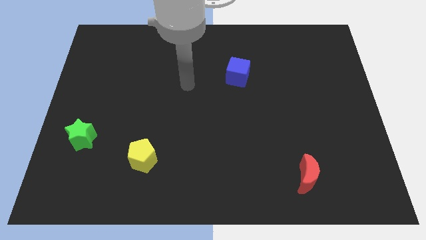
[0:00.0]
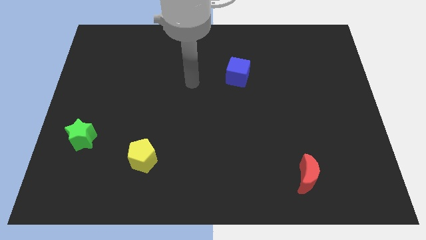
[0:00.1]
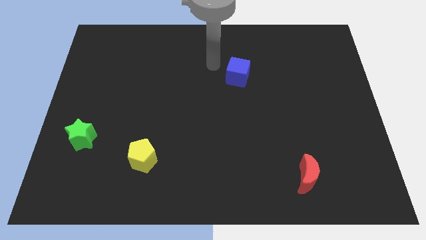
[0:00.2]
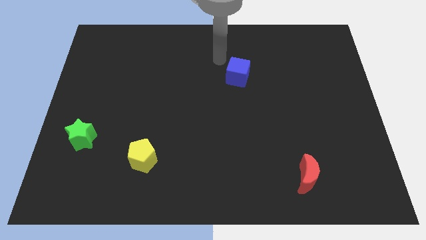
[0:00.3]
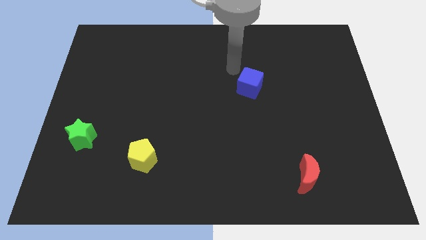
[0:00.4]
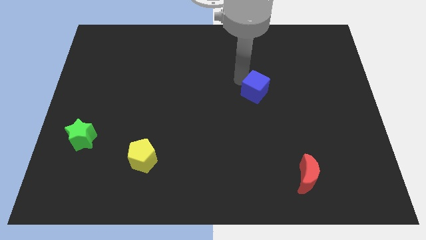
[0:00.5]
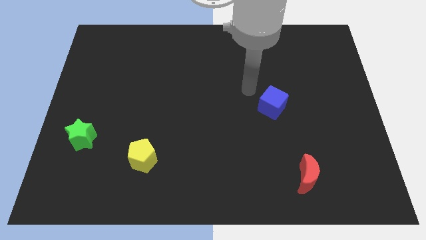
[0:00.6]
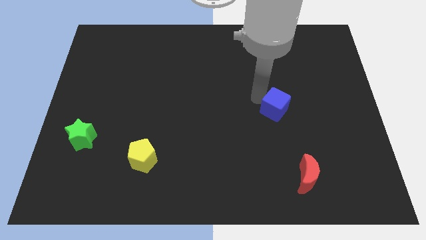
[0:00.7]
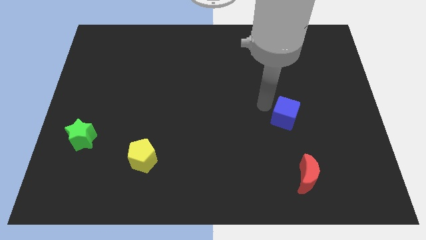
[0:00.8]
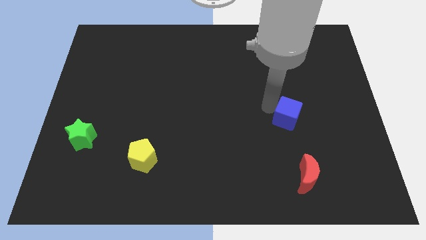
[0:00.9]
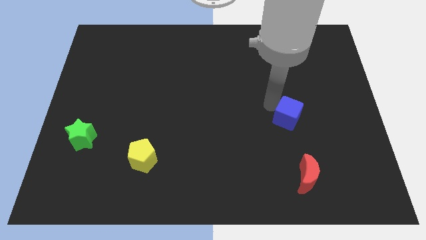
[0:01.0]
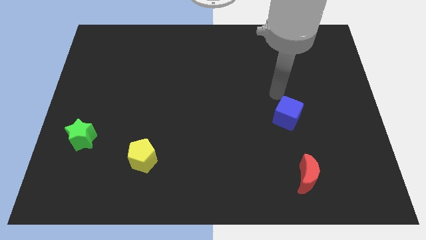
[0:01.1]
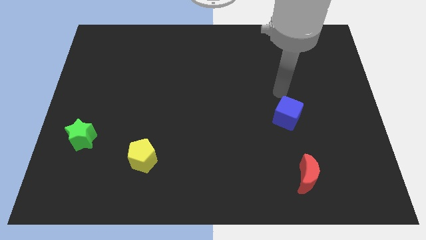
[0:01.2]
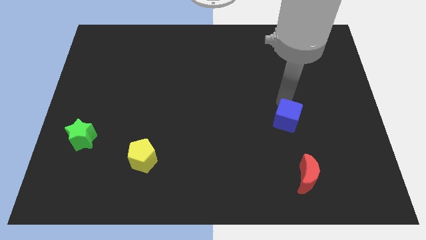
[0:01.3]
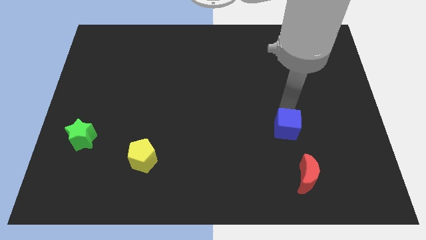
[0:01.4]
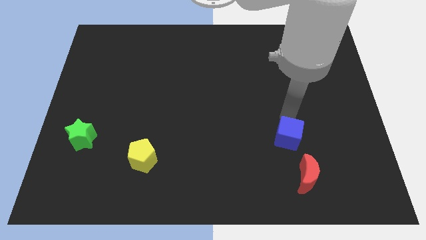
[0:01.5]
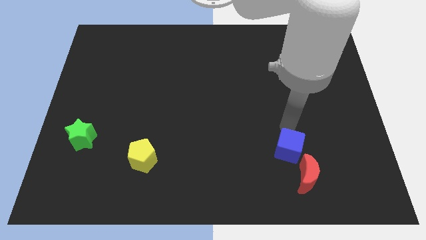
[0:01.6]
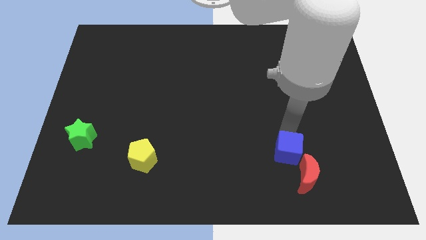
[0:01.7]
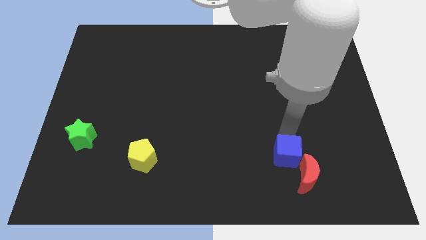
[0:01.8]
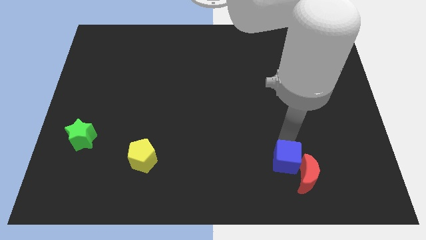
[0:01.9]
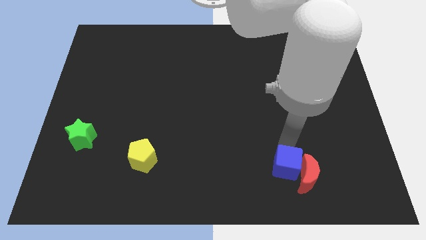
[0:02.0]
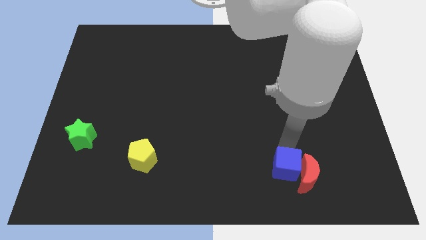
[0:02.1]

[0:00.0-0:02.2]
move the blue block close to the red moon

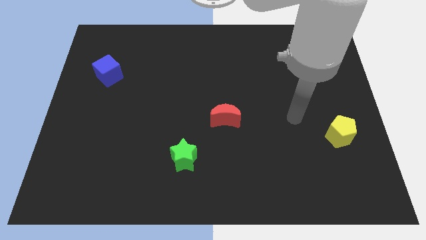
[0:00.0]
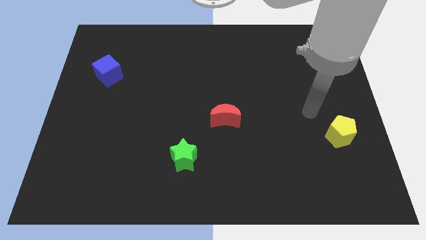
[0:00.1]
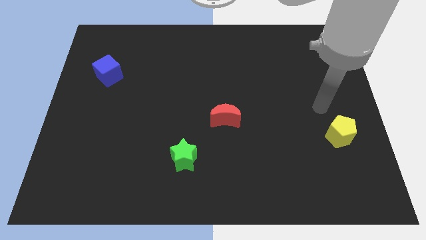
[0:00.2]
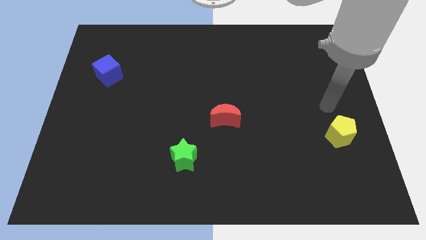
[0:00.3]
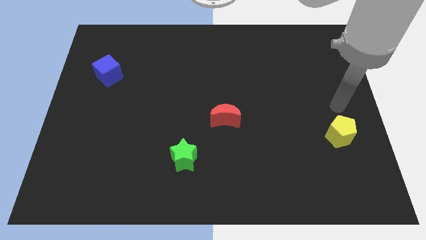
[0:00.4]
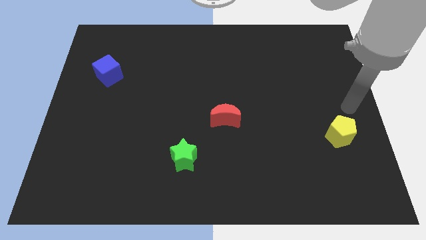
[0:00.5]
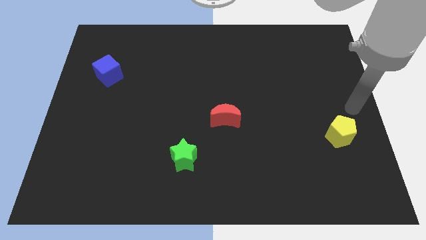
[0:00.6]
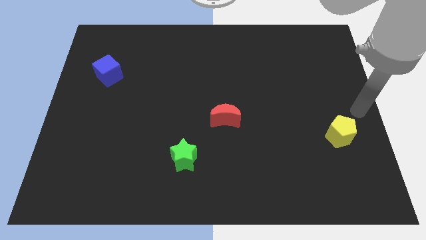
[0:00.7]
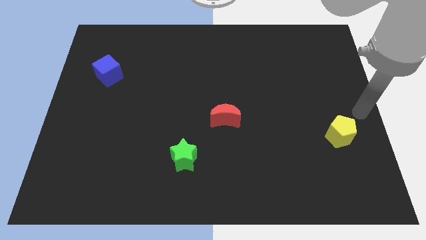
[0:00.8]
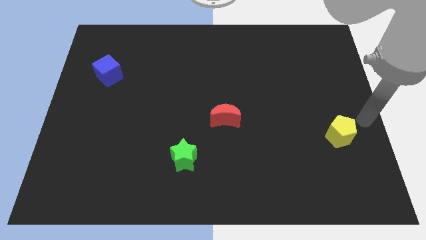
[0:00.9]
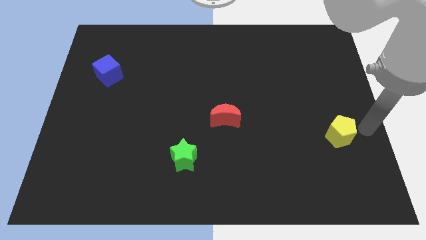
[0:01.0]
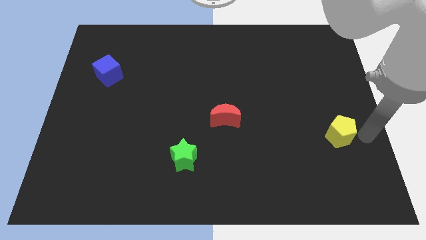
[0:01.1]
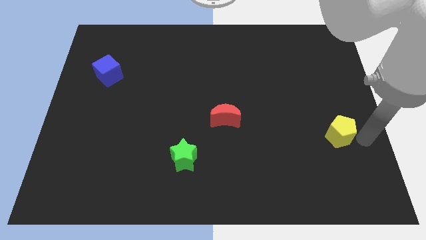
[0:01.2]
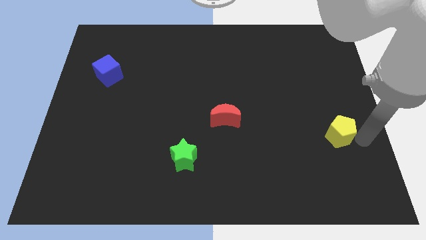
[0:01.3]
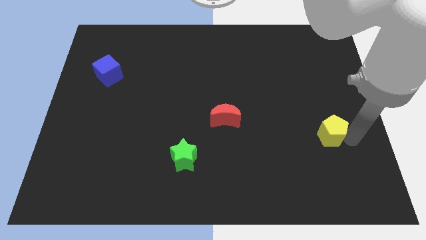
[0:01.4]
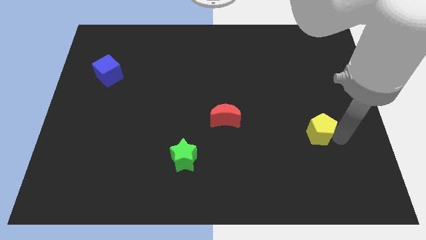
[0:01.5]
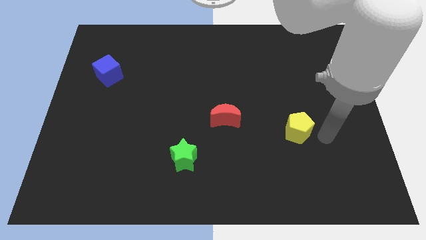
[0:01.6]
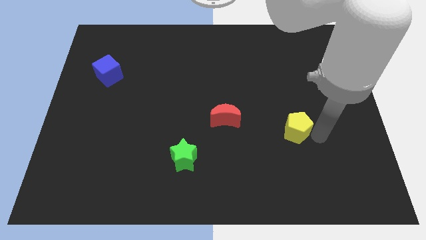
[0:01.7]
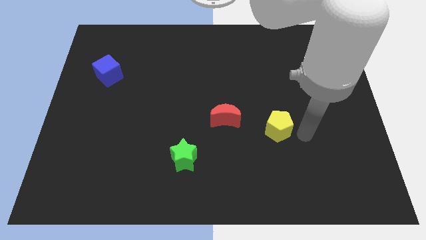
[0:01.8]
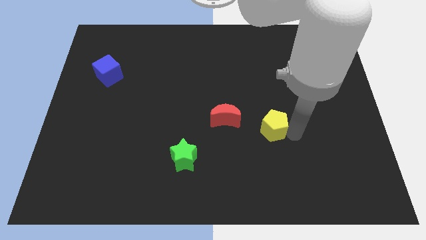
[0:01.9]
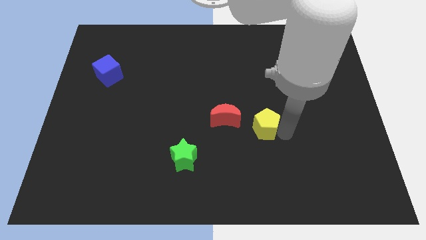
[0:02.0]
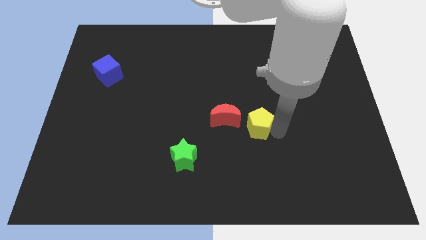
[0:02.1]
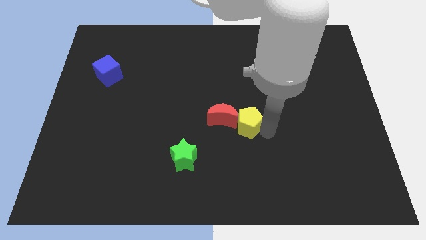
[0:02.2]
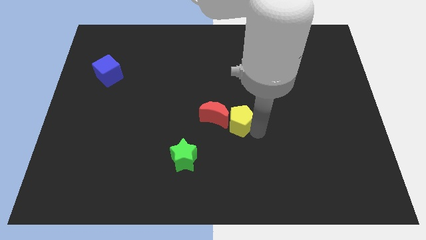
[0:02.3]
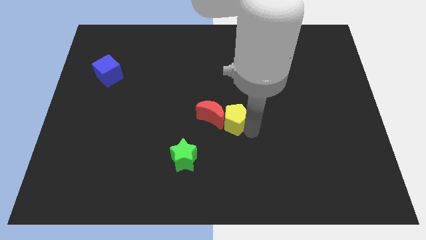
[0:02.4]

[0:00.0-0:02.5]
slide the yellow pentagon towards the moon

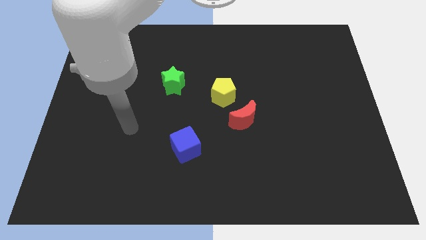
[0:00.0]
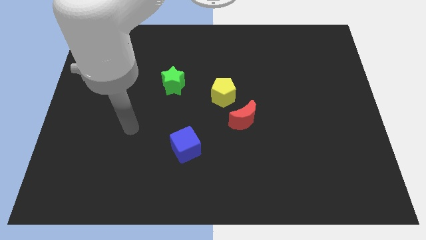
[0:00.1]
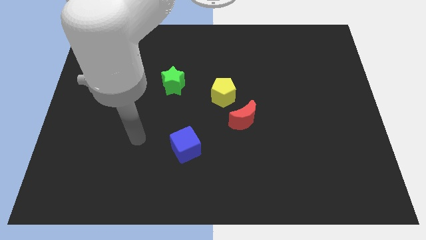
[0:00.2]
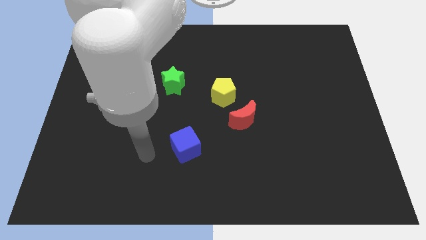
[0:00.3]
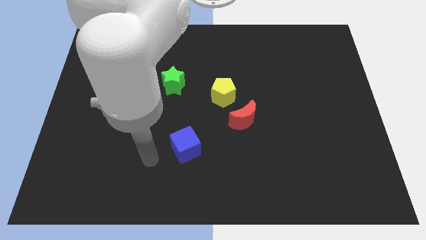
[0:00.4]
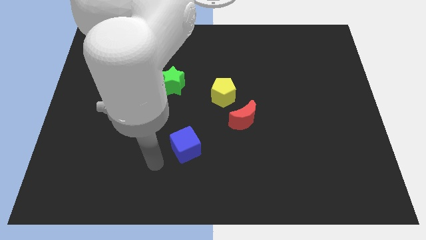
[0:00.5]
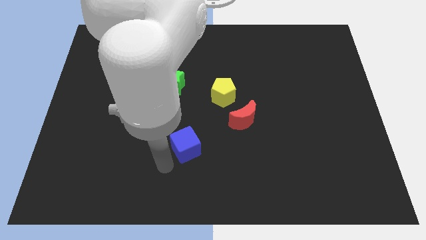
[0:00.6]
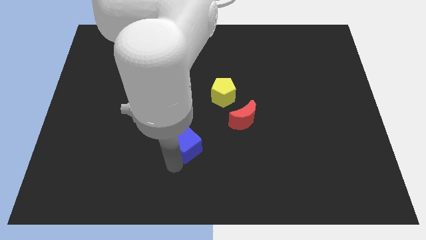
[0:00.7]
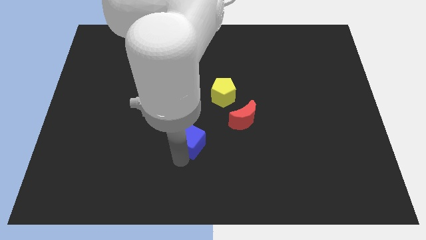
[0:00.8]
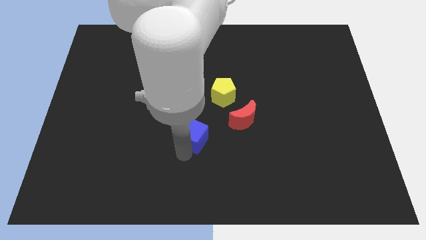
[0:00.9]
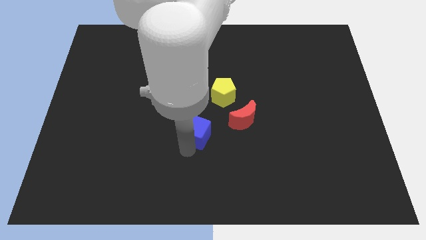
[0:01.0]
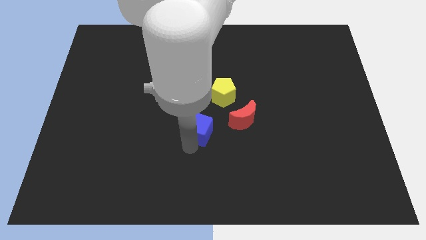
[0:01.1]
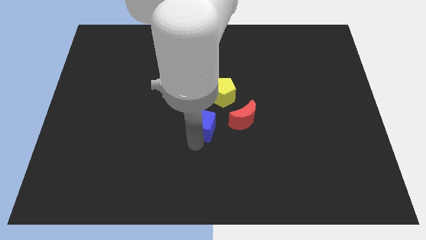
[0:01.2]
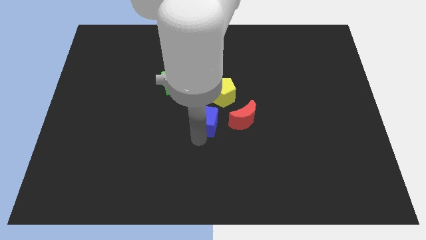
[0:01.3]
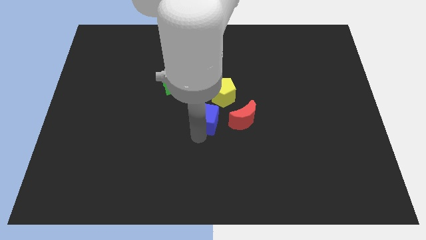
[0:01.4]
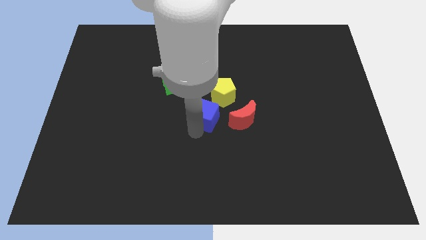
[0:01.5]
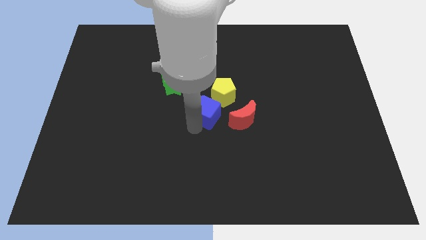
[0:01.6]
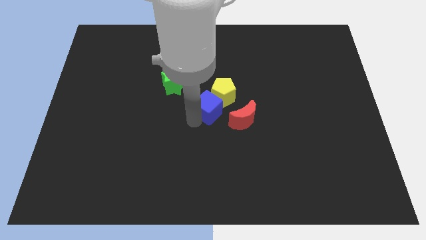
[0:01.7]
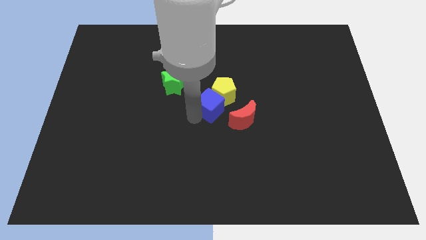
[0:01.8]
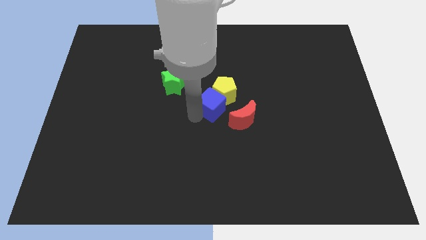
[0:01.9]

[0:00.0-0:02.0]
slide the blue block next to the yellow pentagon

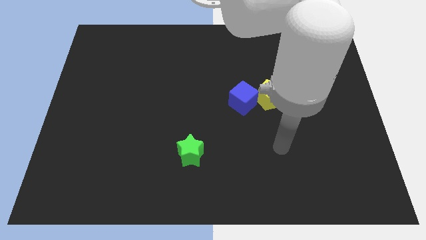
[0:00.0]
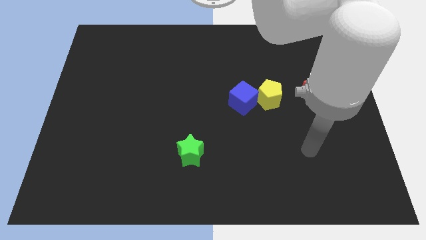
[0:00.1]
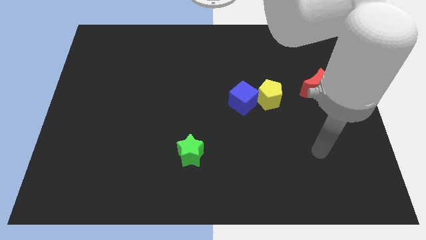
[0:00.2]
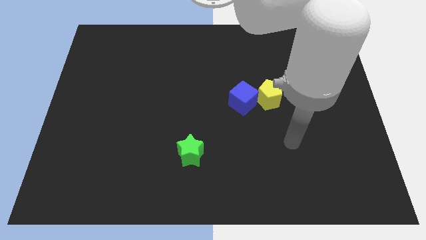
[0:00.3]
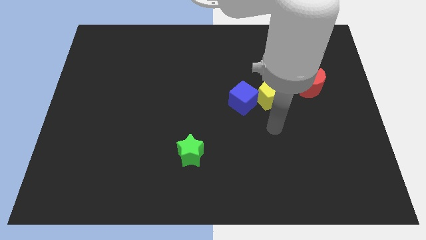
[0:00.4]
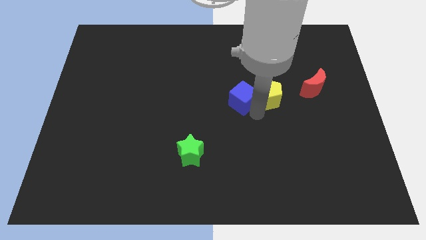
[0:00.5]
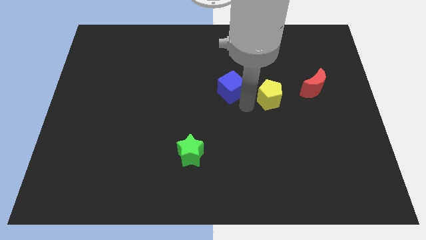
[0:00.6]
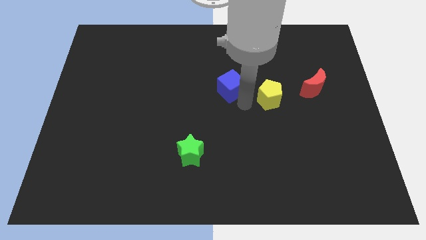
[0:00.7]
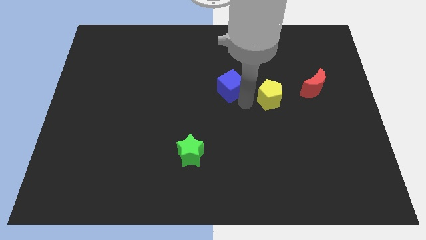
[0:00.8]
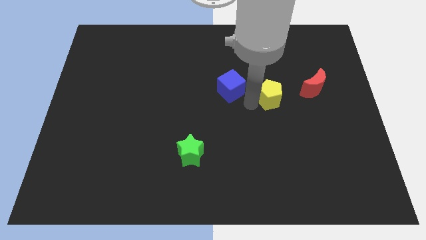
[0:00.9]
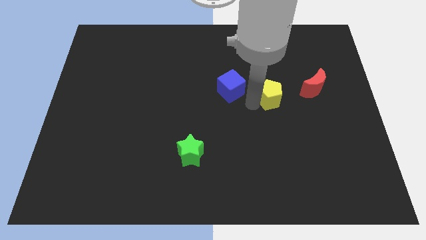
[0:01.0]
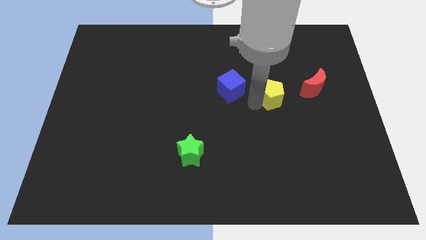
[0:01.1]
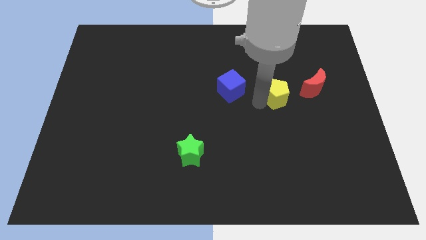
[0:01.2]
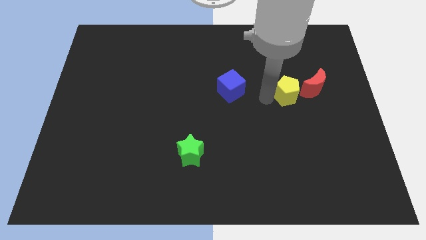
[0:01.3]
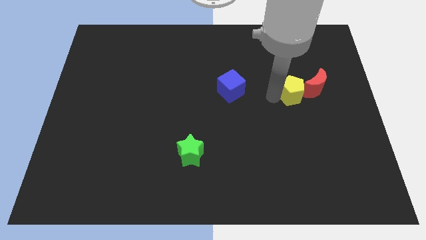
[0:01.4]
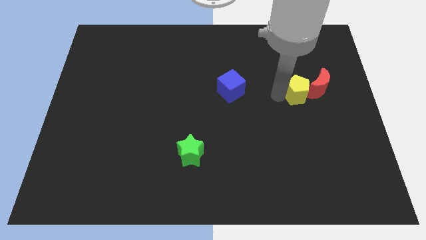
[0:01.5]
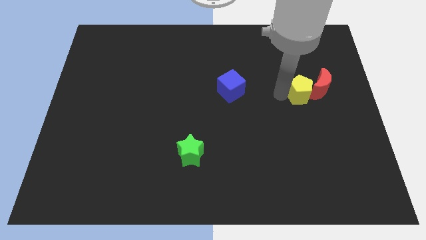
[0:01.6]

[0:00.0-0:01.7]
push the yellow block next to the red moon

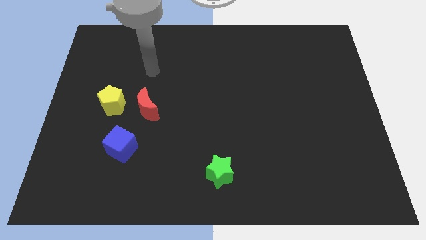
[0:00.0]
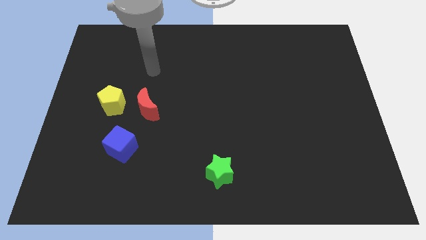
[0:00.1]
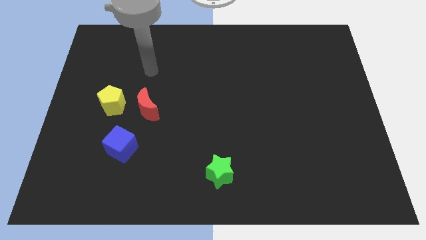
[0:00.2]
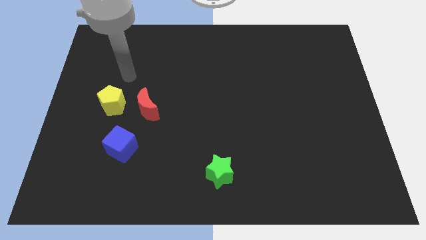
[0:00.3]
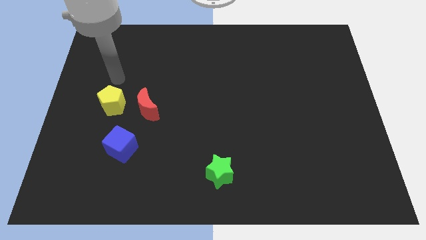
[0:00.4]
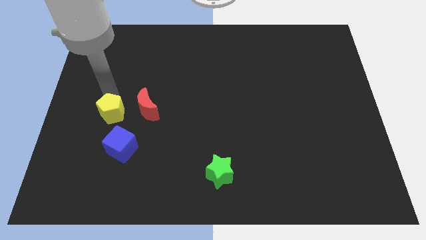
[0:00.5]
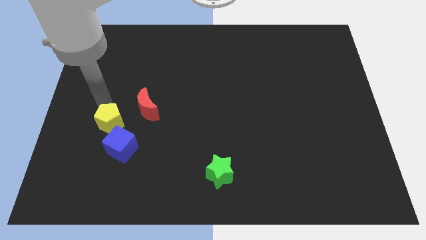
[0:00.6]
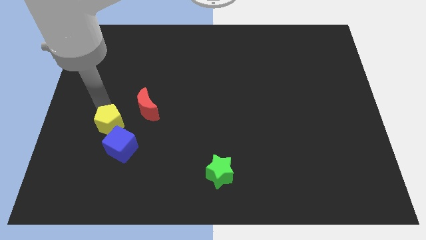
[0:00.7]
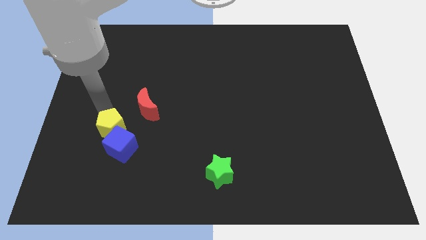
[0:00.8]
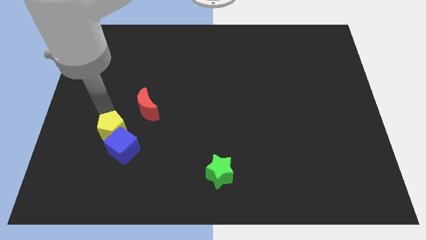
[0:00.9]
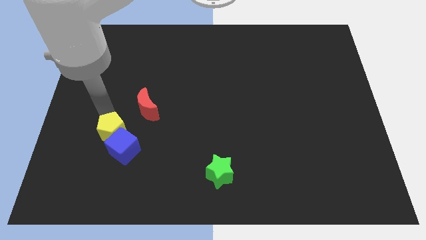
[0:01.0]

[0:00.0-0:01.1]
put the pentagon close to the blue cube
